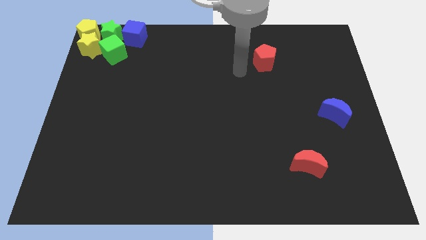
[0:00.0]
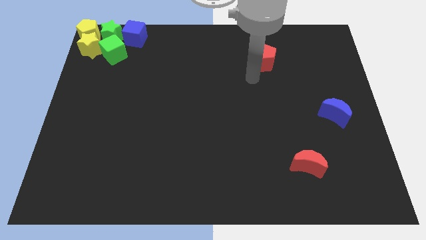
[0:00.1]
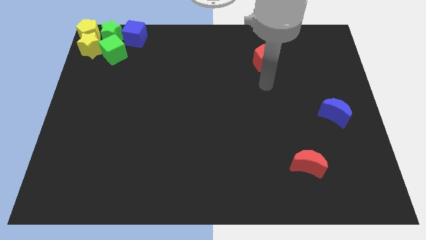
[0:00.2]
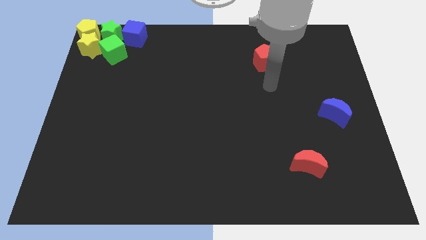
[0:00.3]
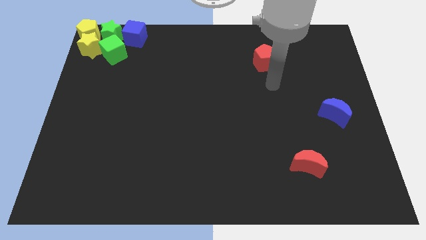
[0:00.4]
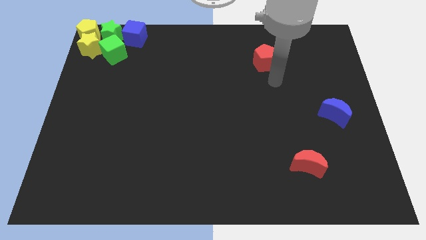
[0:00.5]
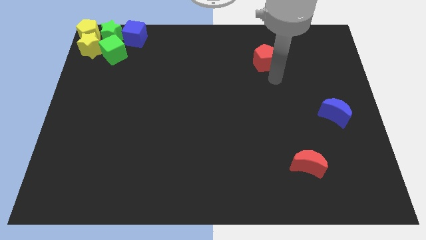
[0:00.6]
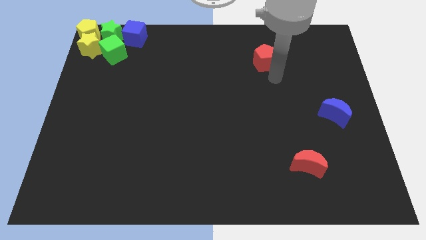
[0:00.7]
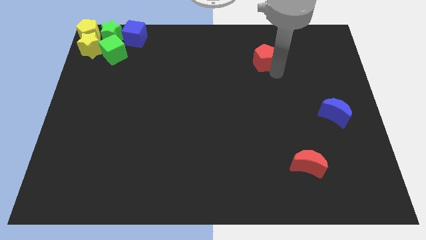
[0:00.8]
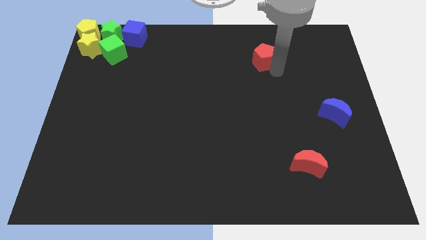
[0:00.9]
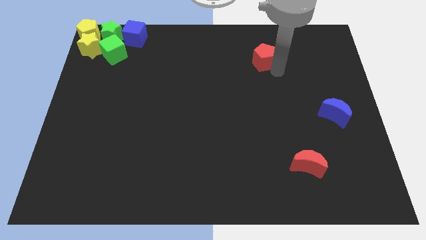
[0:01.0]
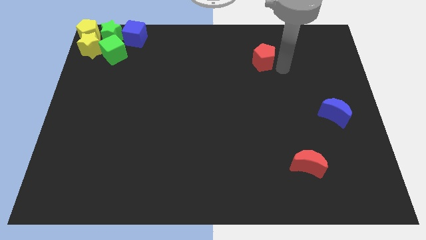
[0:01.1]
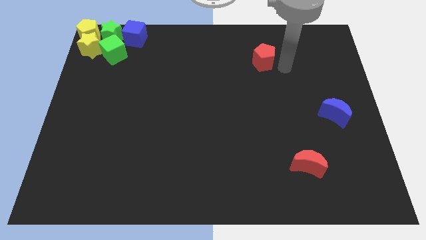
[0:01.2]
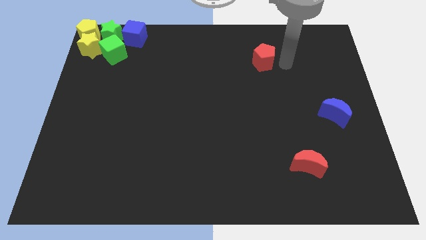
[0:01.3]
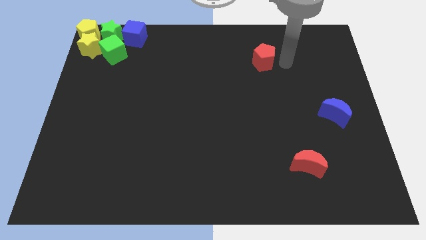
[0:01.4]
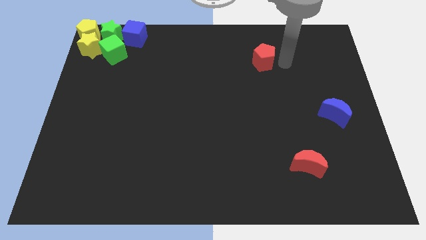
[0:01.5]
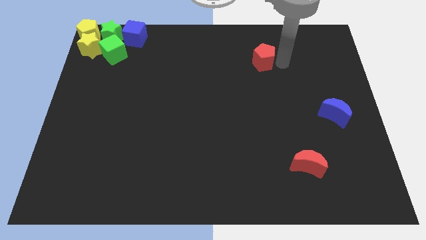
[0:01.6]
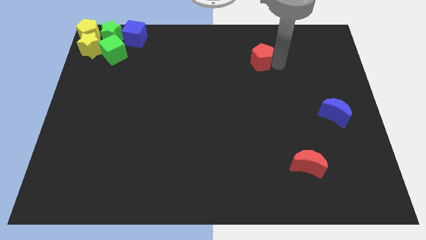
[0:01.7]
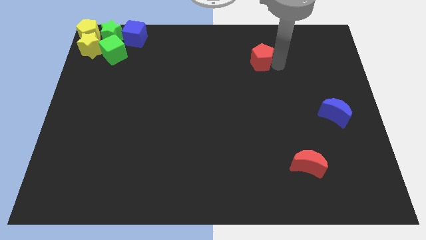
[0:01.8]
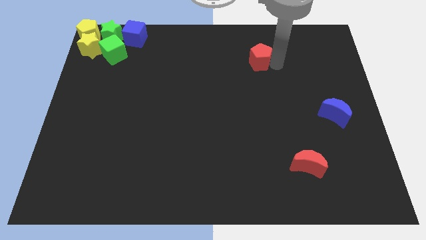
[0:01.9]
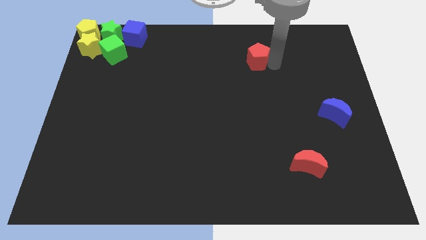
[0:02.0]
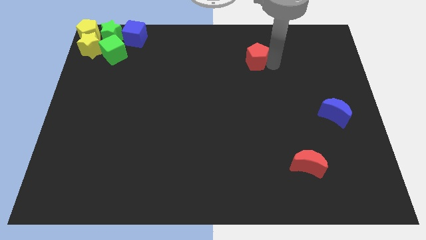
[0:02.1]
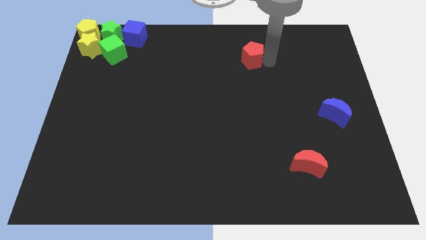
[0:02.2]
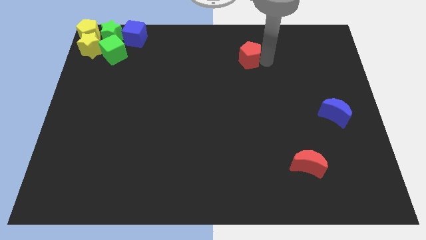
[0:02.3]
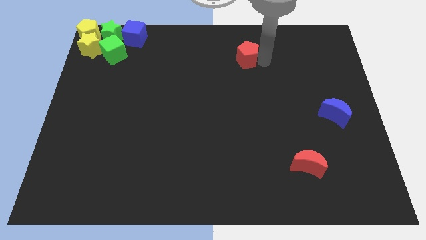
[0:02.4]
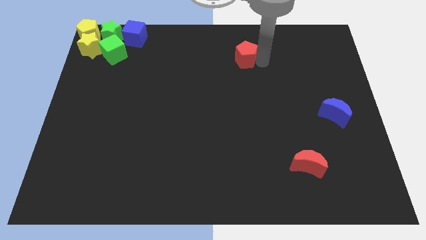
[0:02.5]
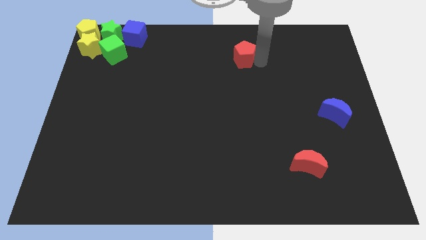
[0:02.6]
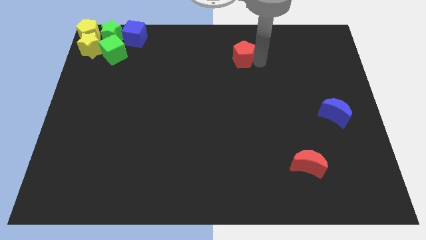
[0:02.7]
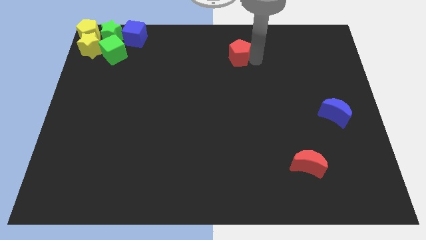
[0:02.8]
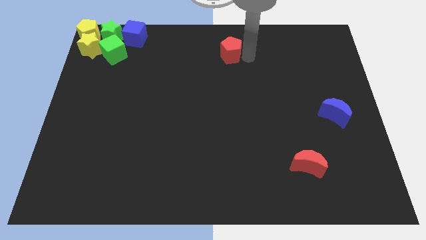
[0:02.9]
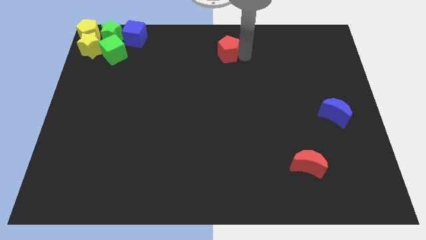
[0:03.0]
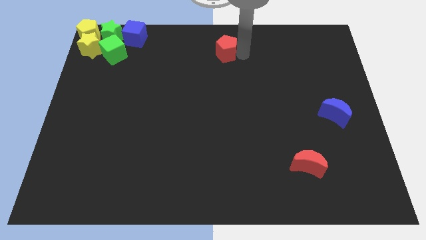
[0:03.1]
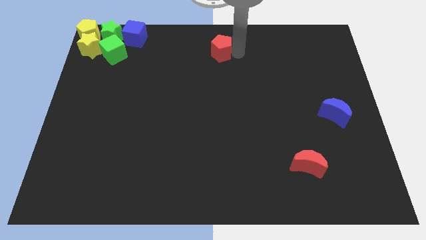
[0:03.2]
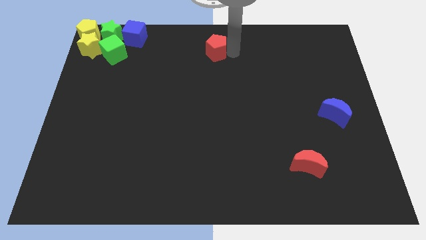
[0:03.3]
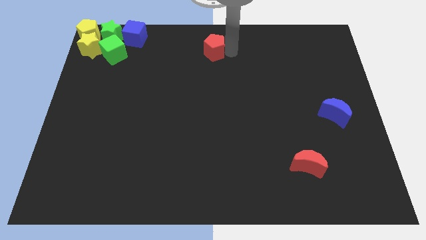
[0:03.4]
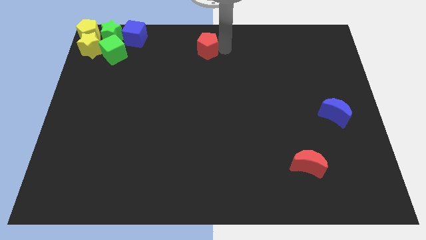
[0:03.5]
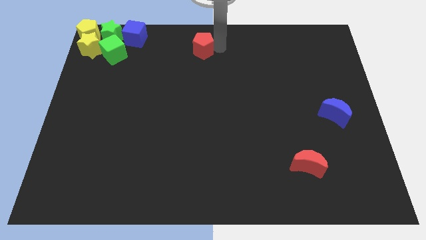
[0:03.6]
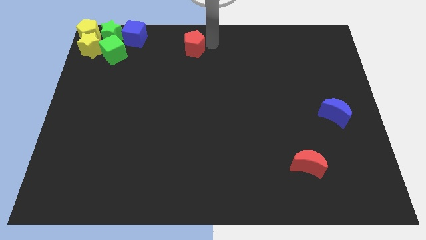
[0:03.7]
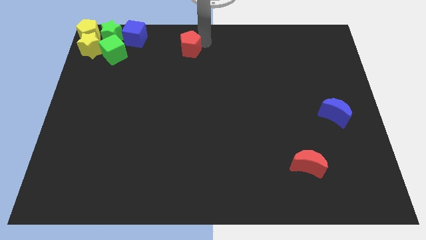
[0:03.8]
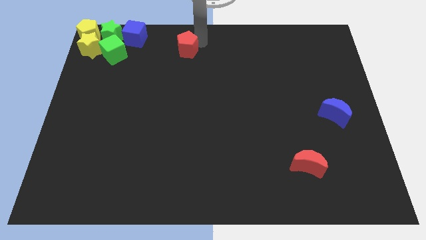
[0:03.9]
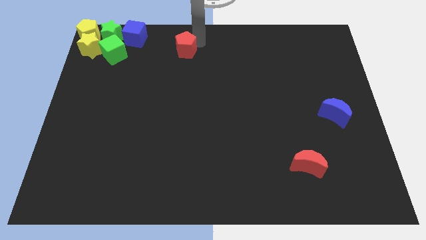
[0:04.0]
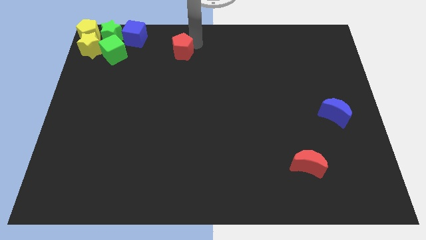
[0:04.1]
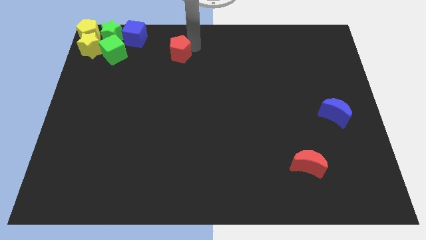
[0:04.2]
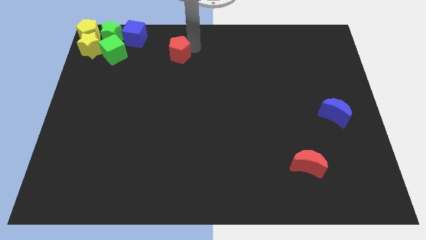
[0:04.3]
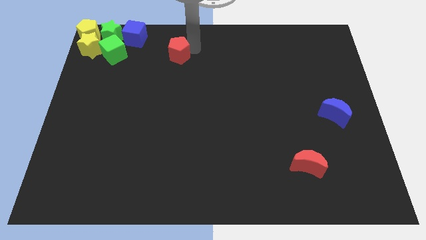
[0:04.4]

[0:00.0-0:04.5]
move the red pentagon towards the blue cube

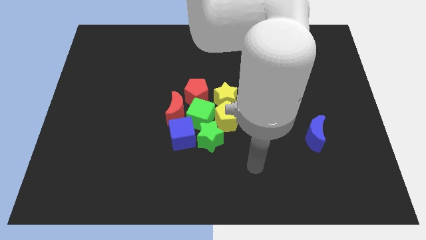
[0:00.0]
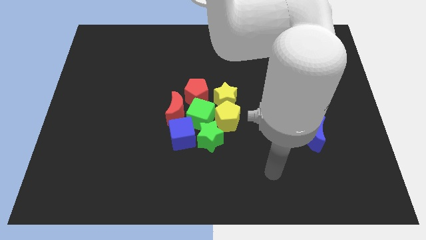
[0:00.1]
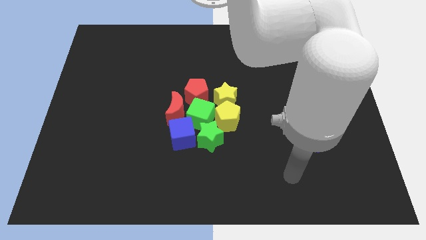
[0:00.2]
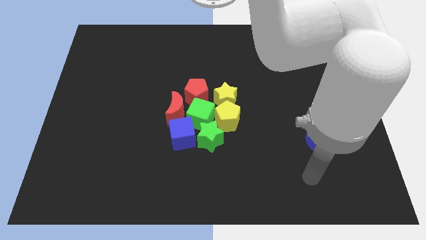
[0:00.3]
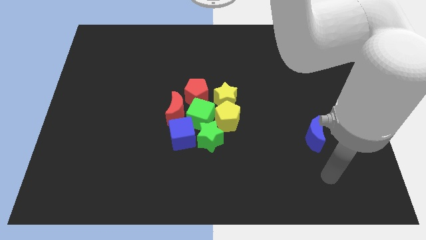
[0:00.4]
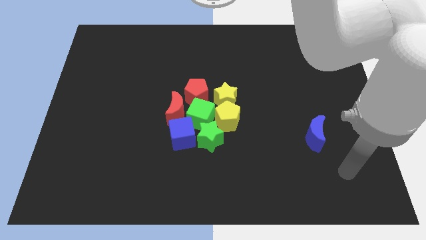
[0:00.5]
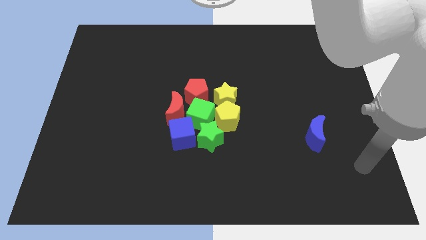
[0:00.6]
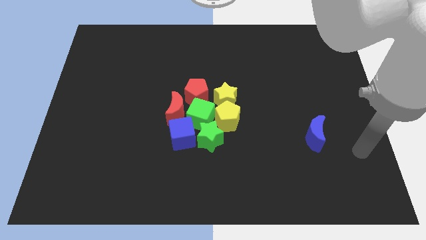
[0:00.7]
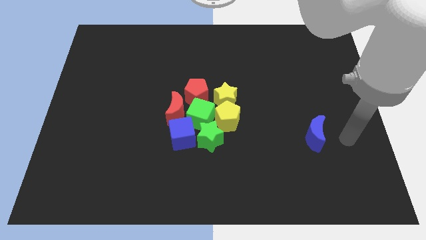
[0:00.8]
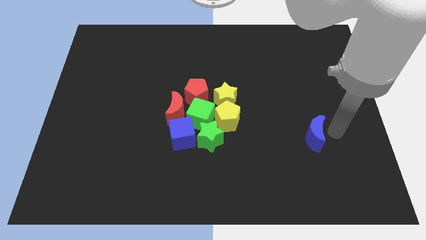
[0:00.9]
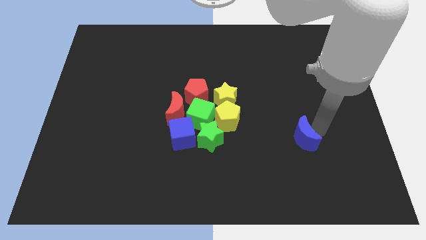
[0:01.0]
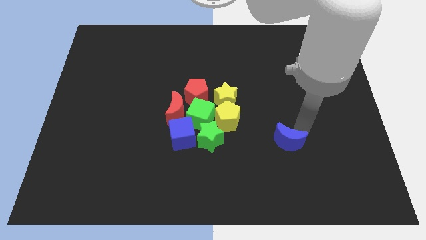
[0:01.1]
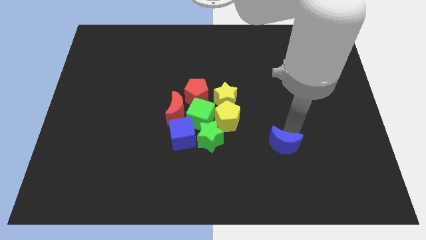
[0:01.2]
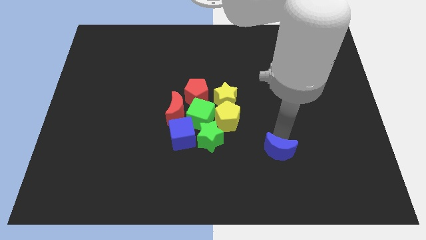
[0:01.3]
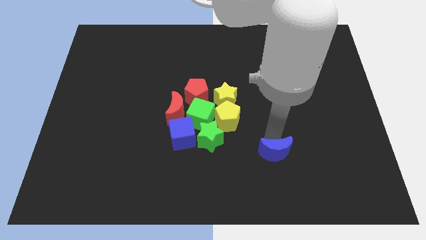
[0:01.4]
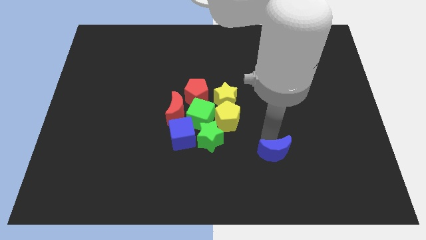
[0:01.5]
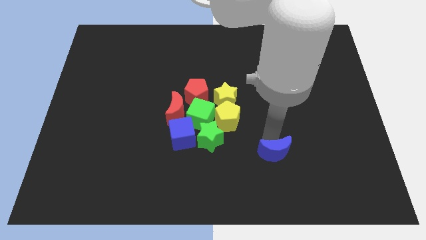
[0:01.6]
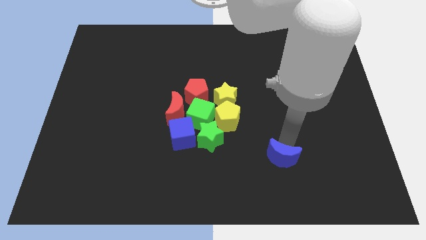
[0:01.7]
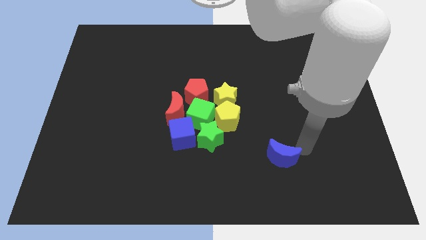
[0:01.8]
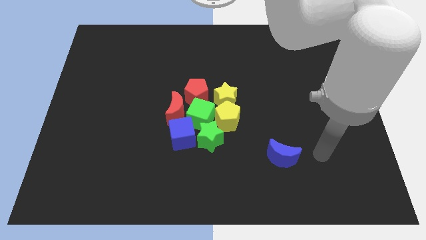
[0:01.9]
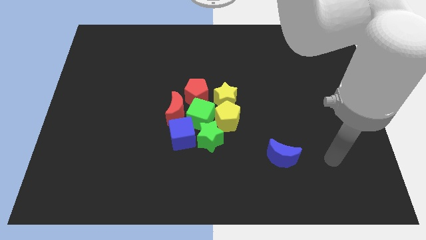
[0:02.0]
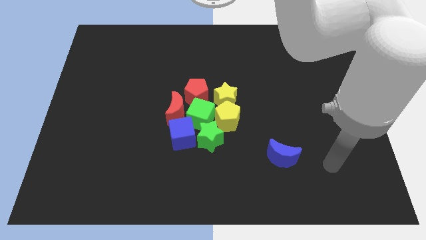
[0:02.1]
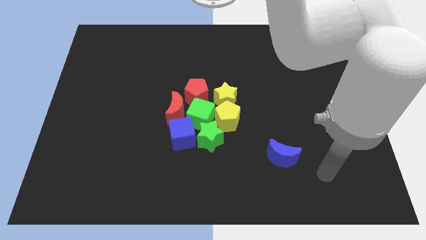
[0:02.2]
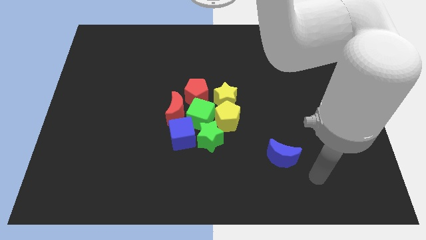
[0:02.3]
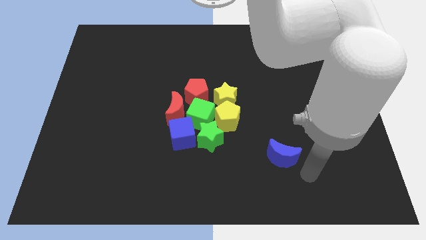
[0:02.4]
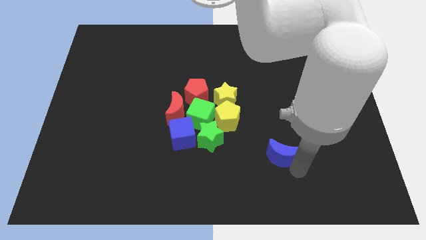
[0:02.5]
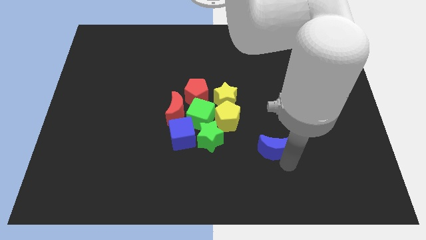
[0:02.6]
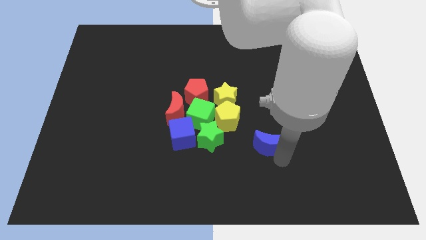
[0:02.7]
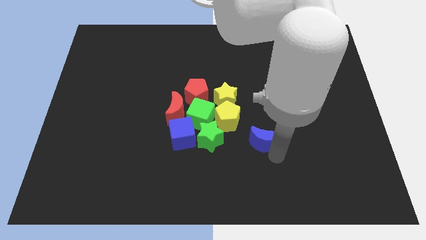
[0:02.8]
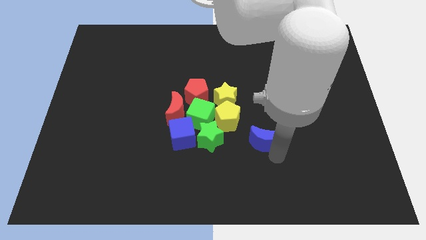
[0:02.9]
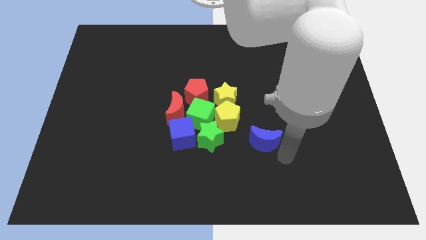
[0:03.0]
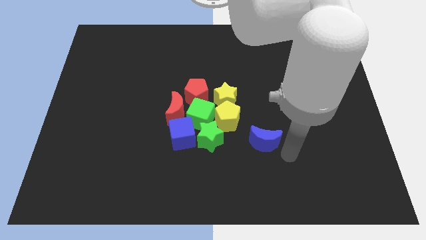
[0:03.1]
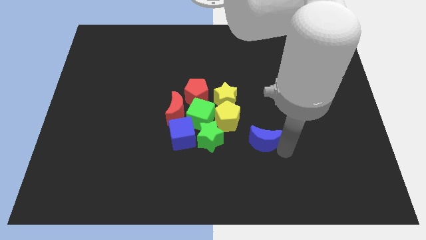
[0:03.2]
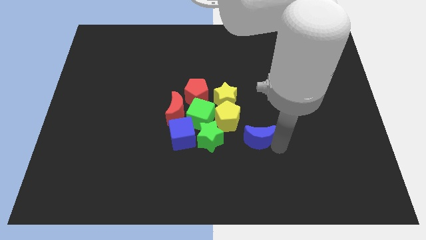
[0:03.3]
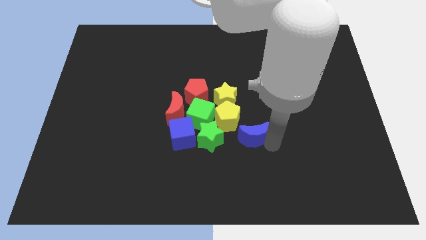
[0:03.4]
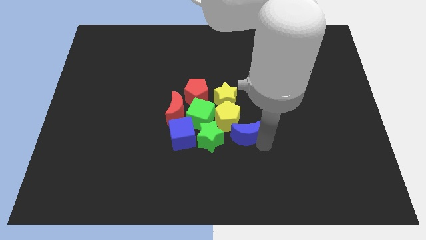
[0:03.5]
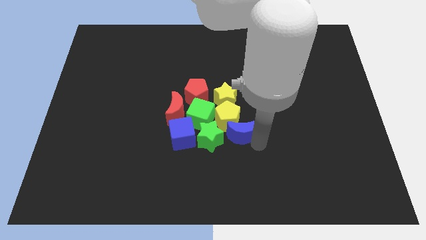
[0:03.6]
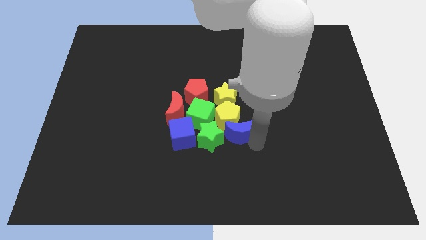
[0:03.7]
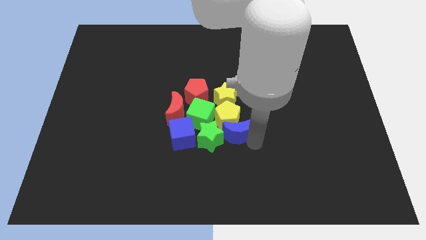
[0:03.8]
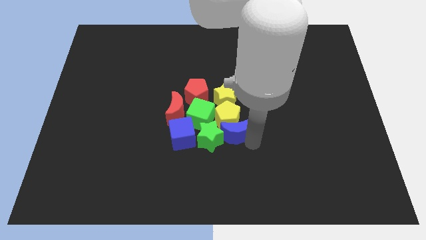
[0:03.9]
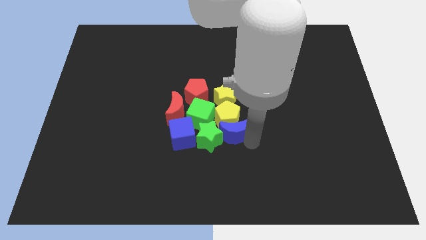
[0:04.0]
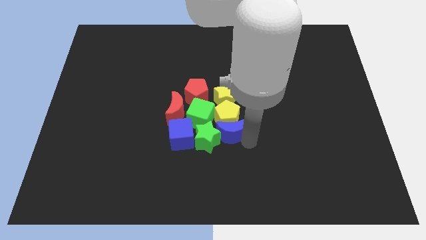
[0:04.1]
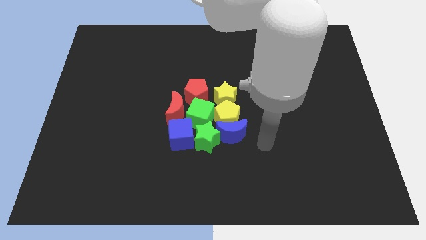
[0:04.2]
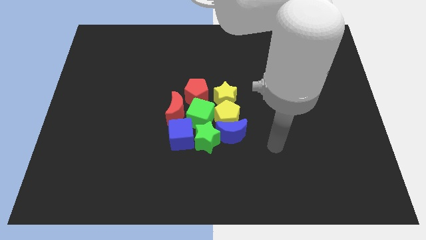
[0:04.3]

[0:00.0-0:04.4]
place the blue moon to the bottom of the yellow pentagon
